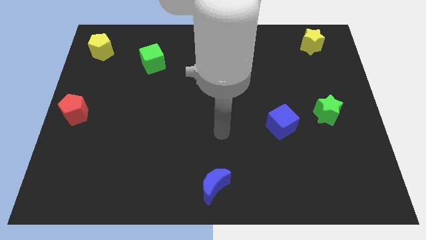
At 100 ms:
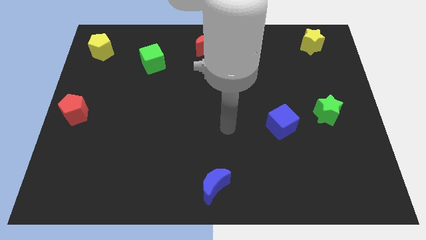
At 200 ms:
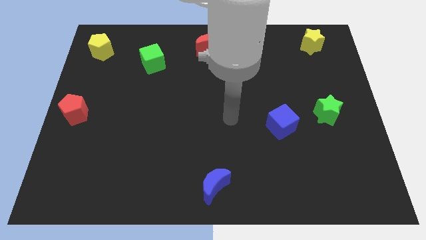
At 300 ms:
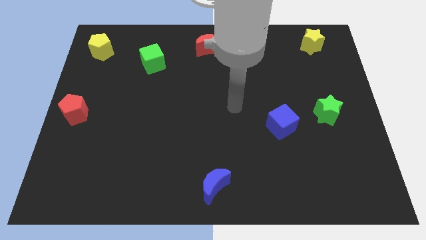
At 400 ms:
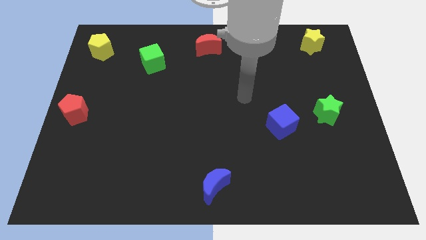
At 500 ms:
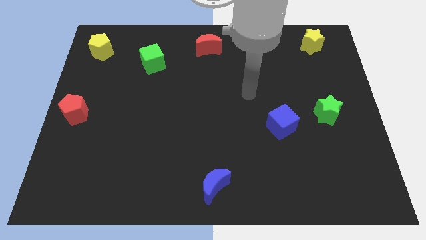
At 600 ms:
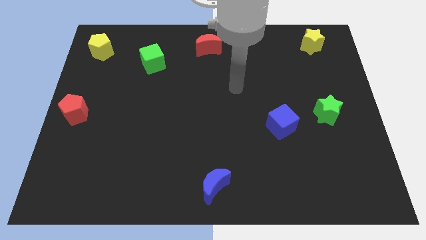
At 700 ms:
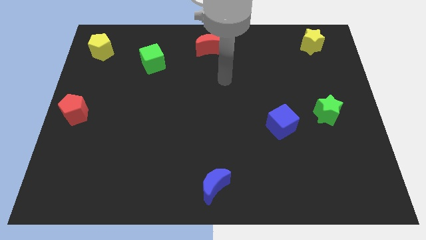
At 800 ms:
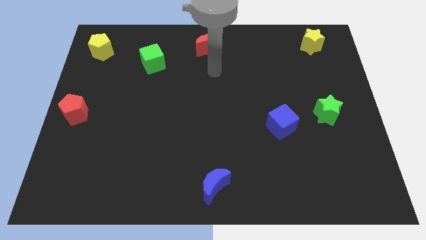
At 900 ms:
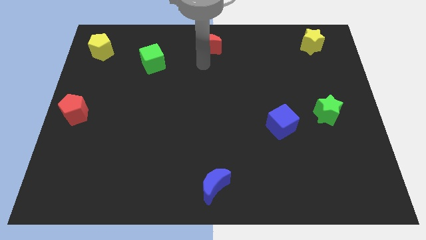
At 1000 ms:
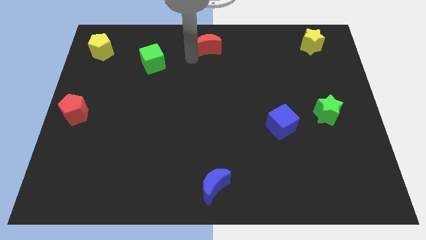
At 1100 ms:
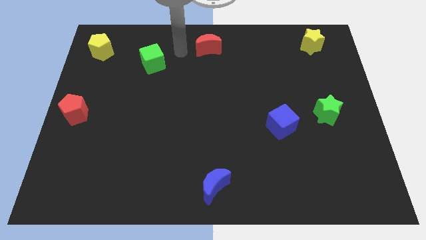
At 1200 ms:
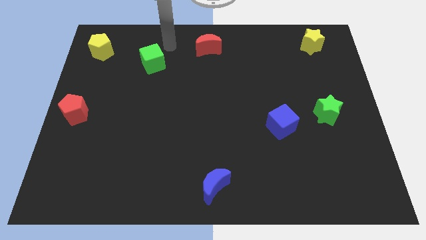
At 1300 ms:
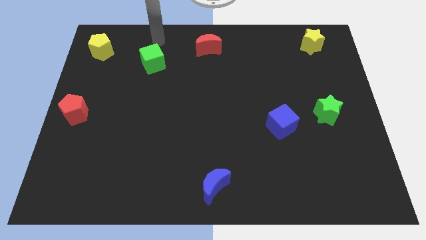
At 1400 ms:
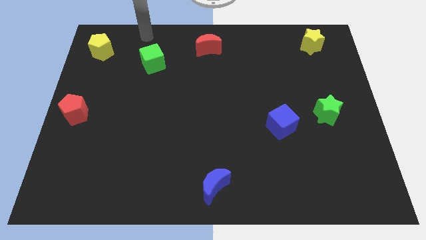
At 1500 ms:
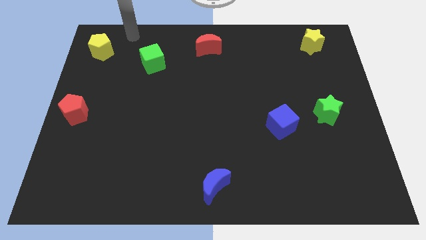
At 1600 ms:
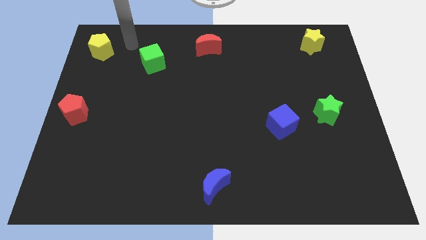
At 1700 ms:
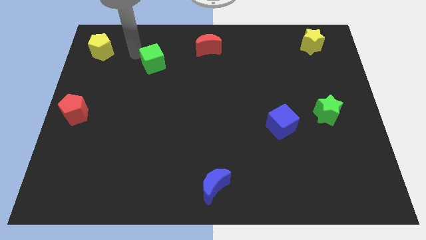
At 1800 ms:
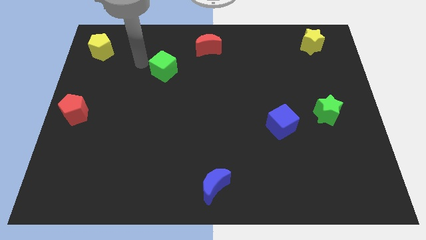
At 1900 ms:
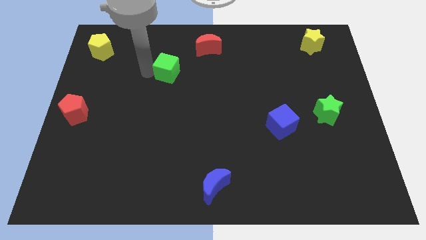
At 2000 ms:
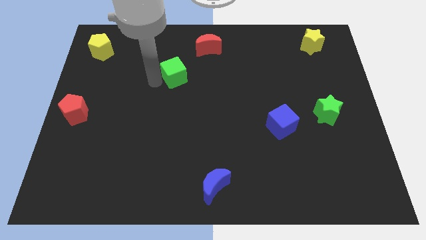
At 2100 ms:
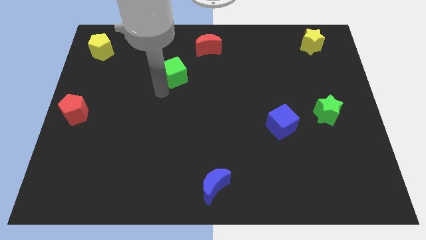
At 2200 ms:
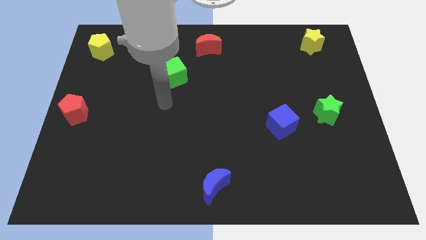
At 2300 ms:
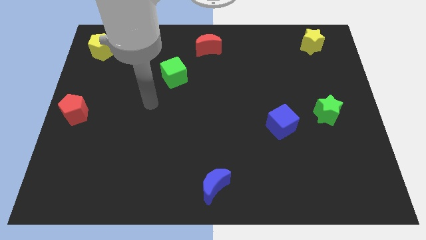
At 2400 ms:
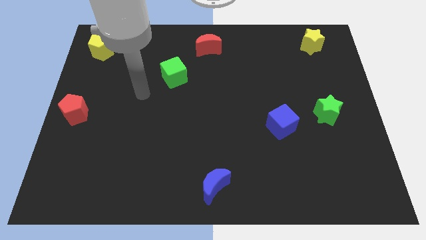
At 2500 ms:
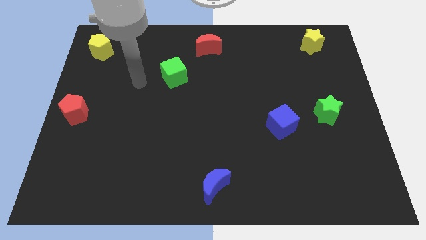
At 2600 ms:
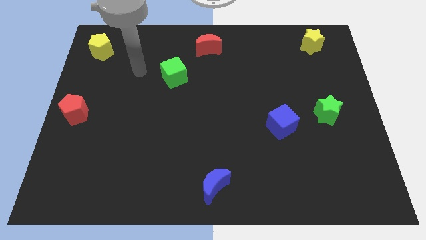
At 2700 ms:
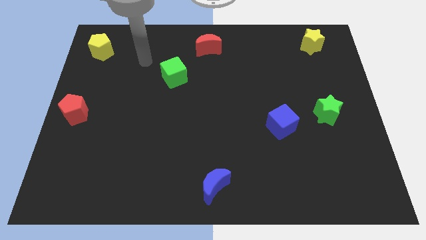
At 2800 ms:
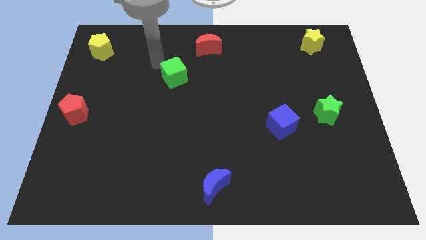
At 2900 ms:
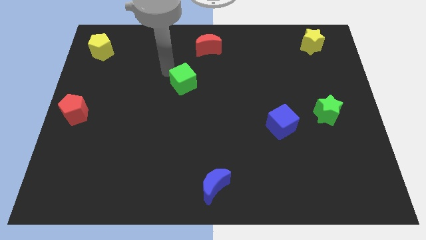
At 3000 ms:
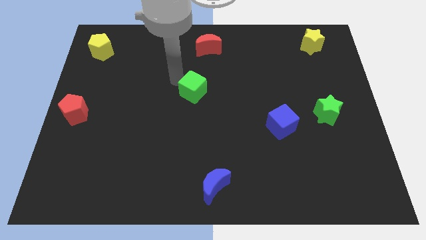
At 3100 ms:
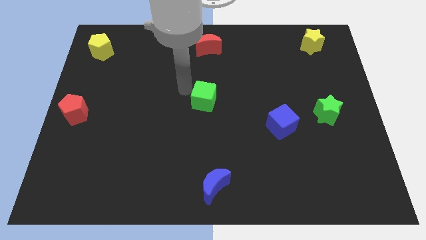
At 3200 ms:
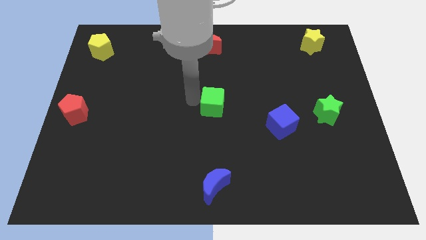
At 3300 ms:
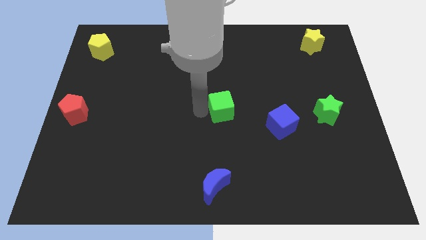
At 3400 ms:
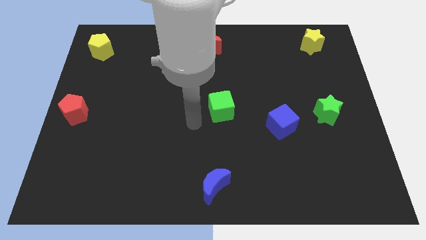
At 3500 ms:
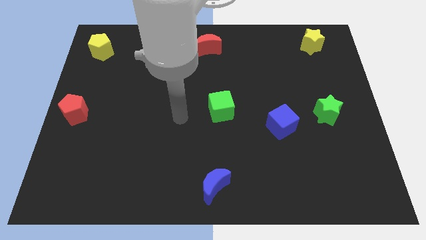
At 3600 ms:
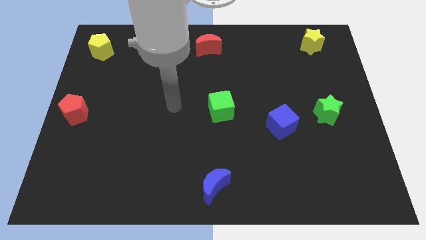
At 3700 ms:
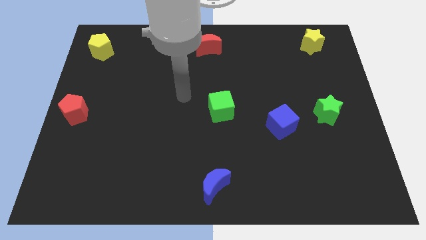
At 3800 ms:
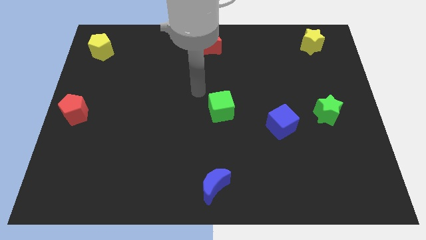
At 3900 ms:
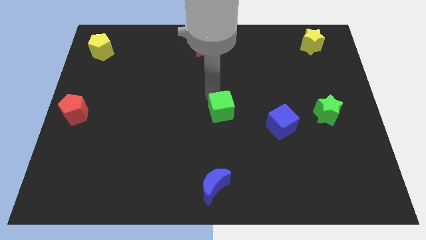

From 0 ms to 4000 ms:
move the green cube to the center of the board

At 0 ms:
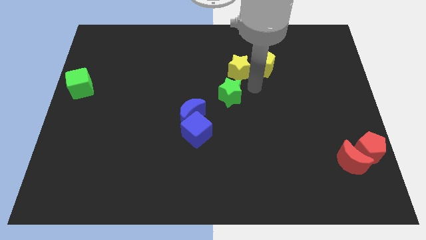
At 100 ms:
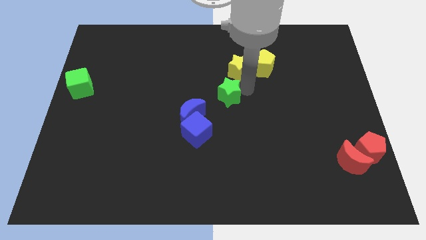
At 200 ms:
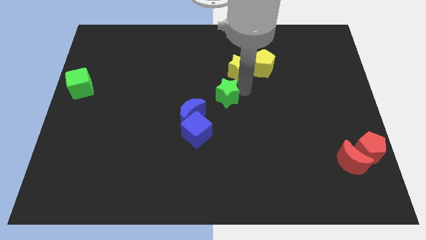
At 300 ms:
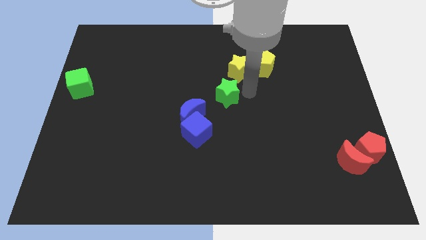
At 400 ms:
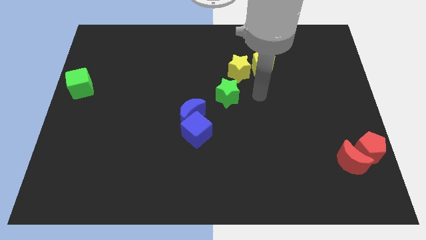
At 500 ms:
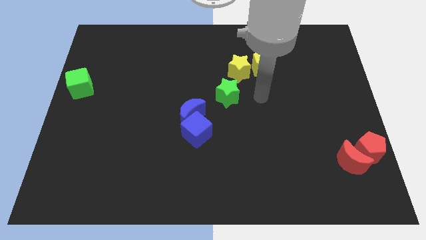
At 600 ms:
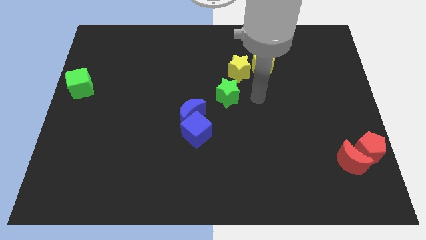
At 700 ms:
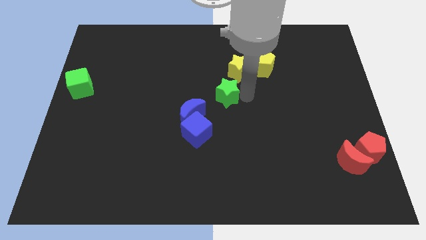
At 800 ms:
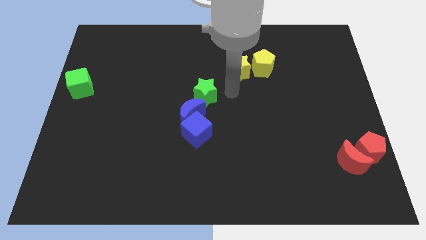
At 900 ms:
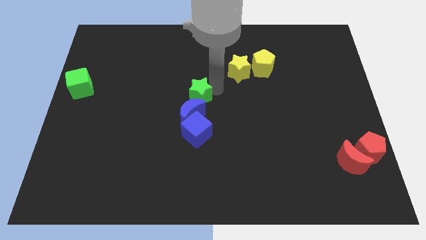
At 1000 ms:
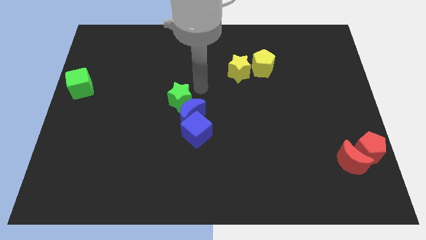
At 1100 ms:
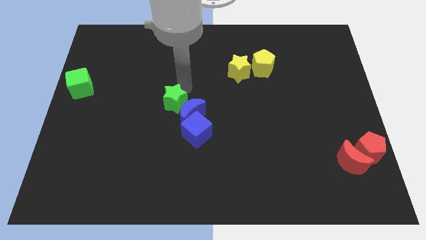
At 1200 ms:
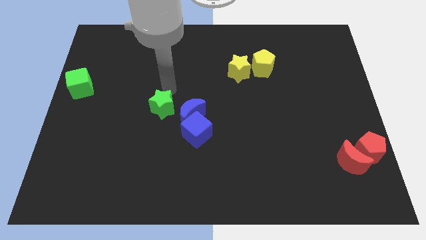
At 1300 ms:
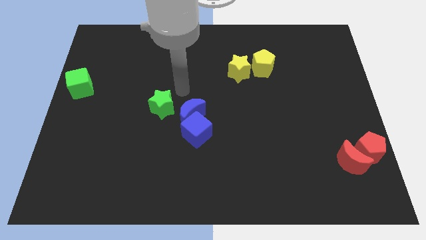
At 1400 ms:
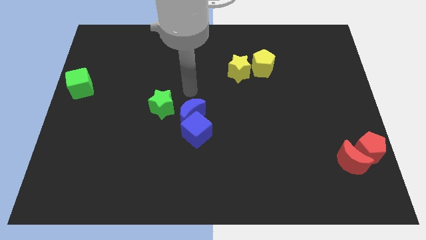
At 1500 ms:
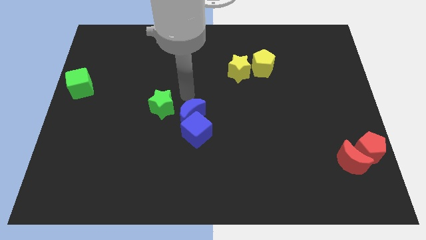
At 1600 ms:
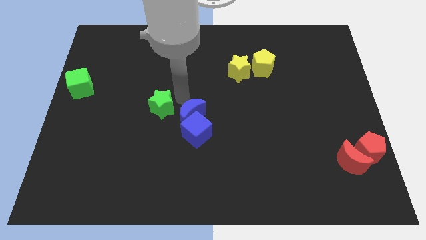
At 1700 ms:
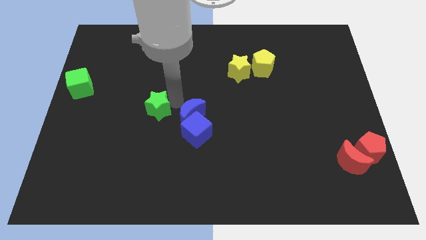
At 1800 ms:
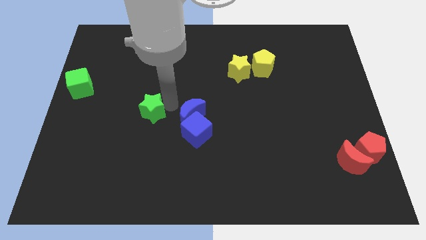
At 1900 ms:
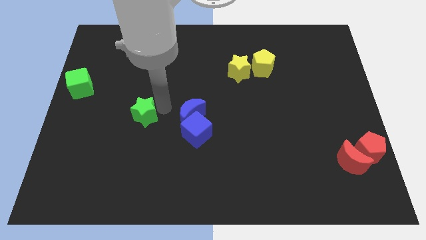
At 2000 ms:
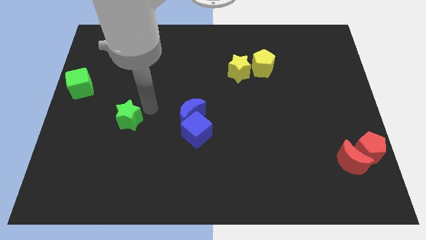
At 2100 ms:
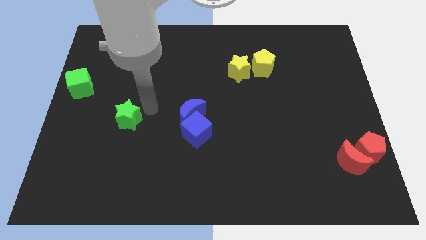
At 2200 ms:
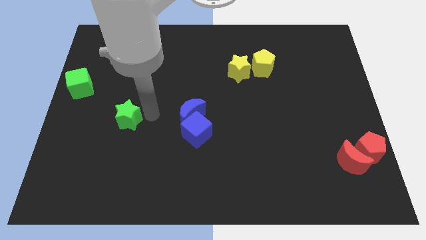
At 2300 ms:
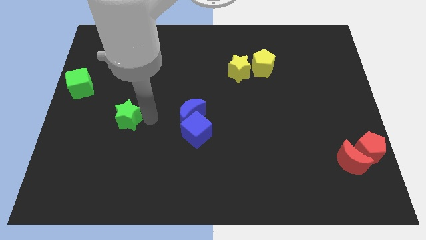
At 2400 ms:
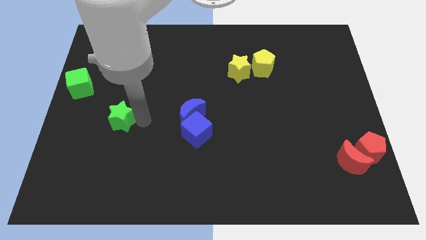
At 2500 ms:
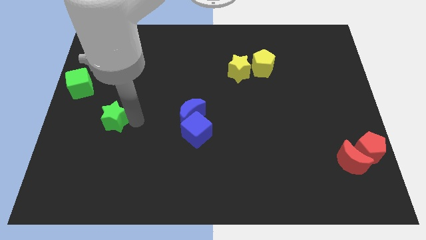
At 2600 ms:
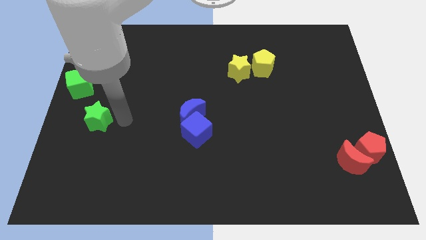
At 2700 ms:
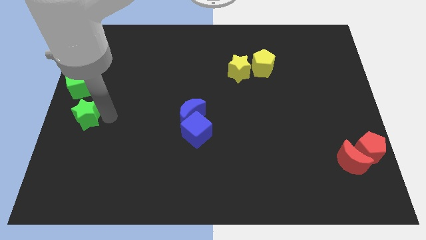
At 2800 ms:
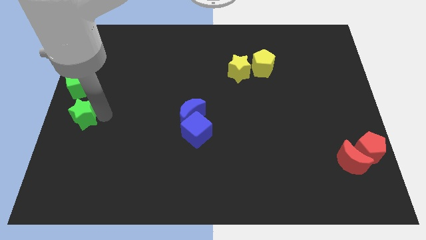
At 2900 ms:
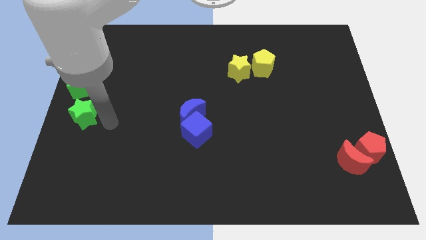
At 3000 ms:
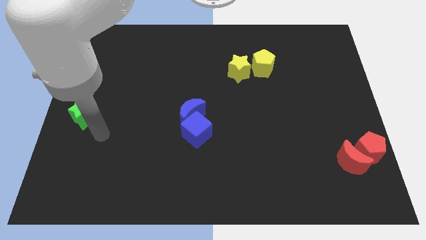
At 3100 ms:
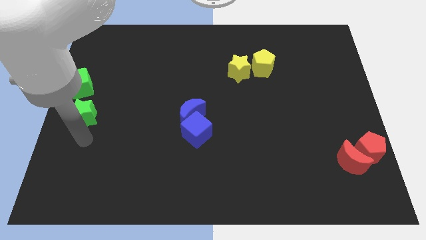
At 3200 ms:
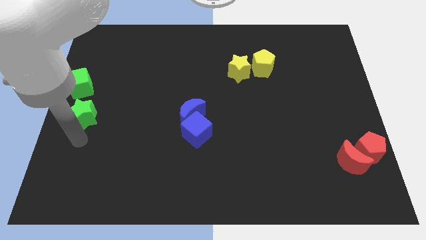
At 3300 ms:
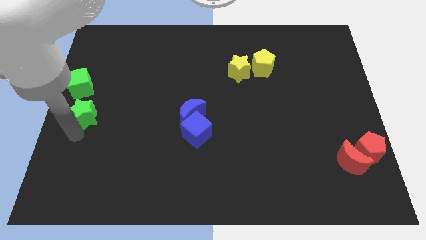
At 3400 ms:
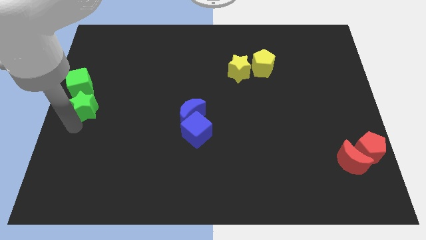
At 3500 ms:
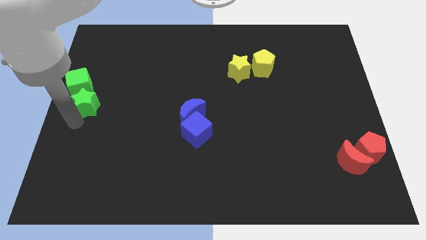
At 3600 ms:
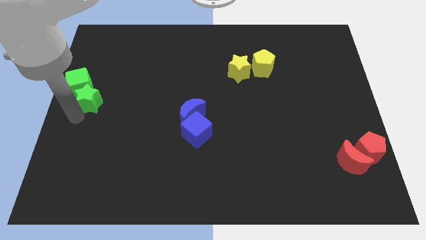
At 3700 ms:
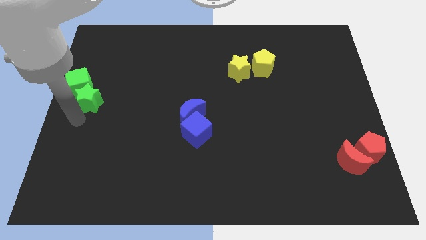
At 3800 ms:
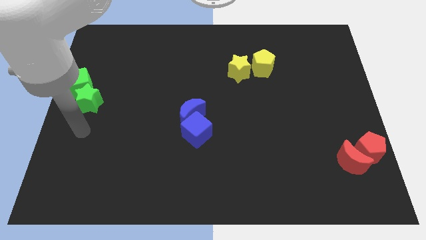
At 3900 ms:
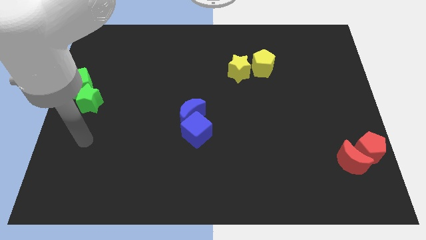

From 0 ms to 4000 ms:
place the green star into the green cube

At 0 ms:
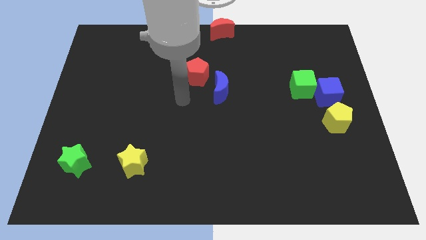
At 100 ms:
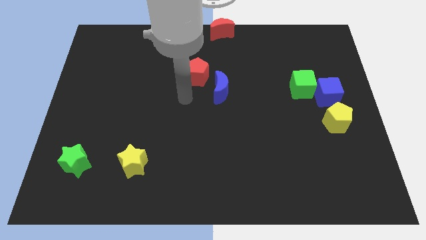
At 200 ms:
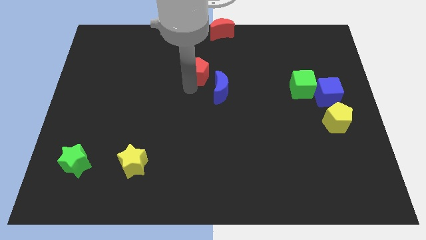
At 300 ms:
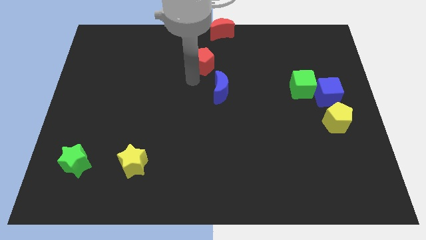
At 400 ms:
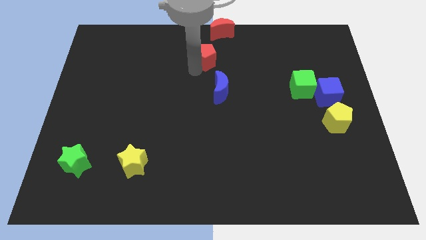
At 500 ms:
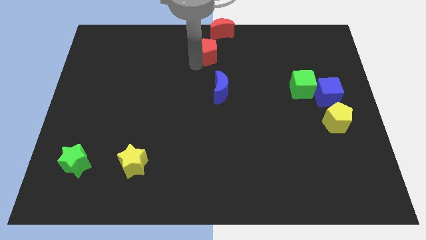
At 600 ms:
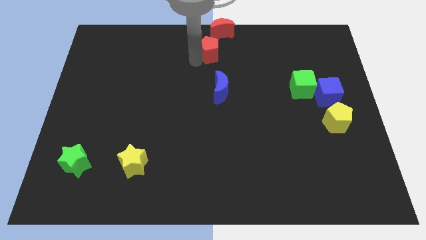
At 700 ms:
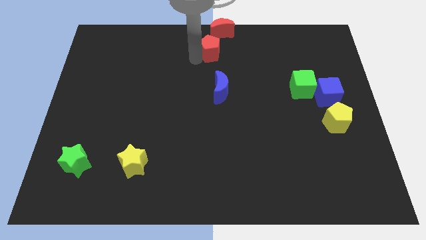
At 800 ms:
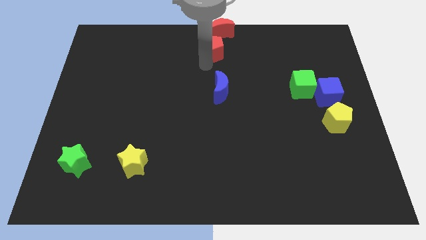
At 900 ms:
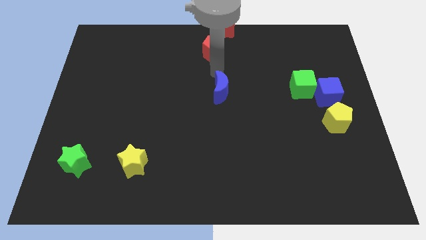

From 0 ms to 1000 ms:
move the red pentagon above the blue moon
